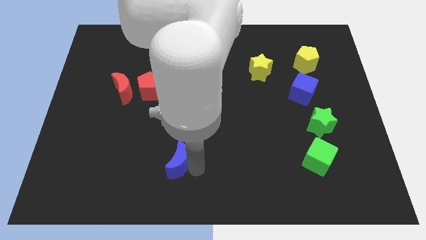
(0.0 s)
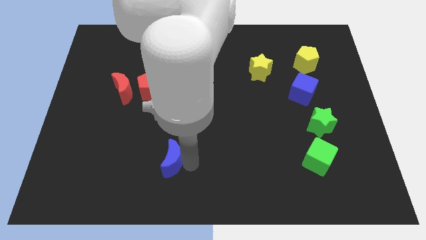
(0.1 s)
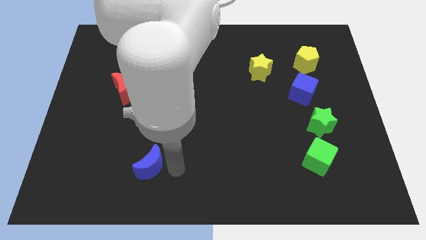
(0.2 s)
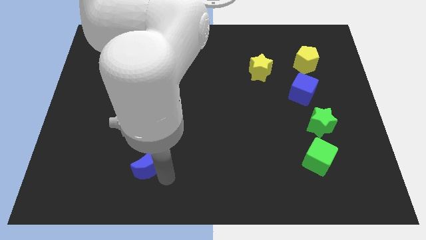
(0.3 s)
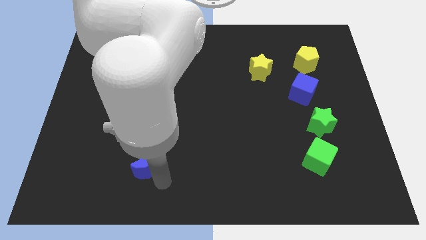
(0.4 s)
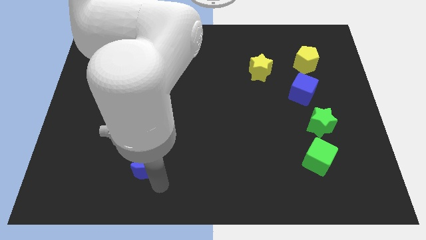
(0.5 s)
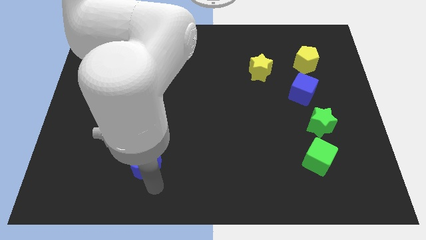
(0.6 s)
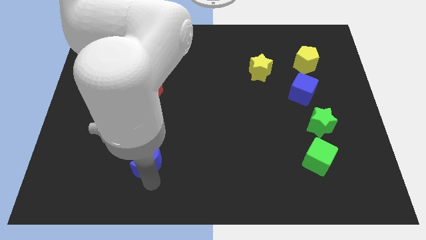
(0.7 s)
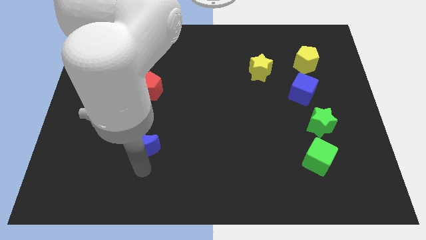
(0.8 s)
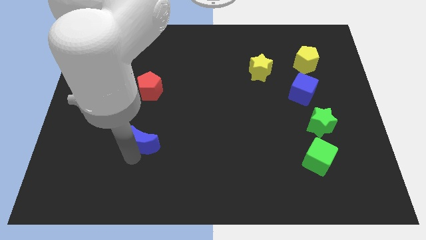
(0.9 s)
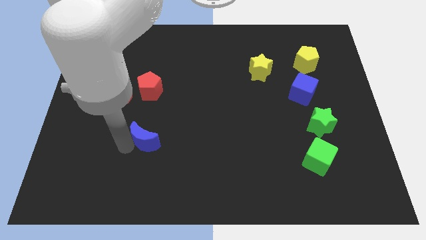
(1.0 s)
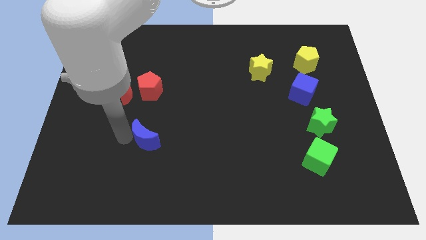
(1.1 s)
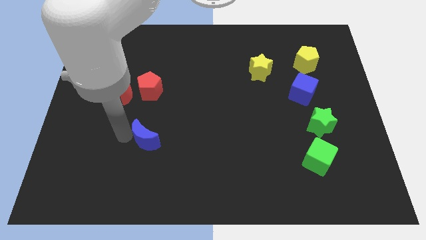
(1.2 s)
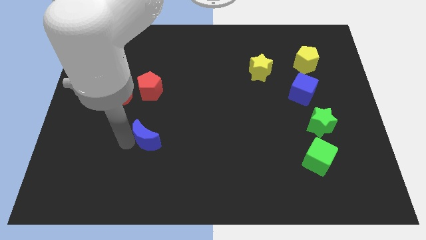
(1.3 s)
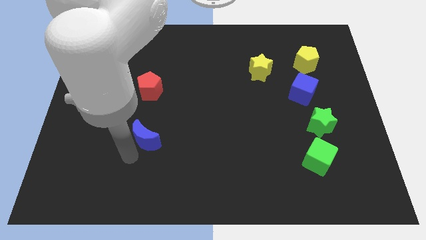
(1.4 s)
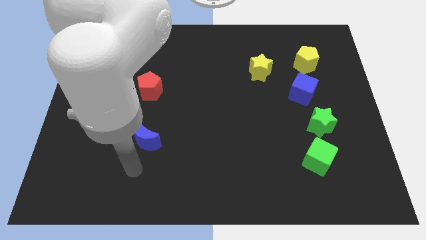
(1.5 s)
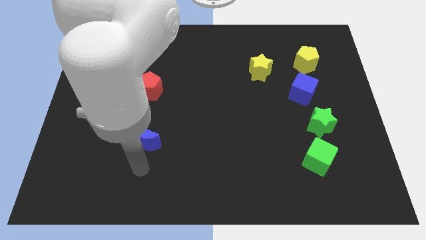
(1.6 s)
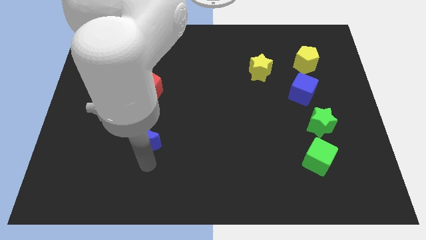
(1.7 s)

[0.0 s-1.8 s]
move the blue crescent vertically below the red pentagon

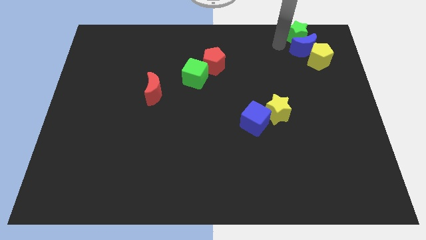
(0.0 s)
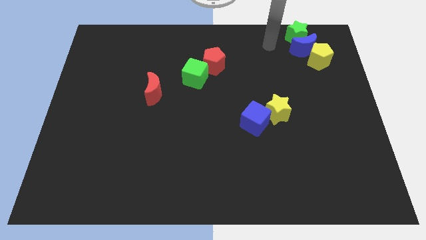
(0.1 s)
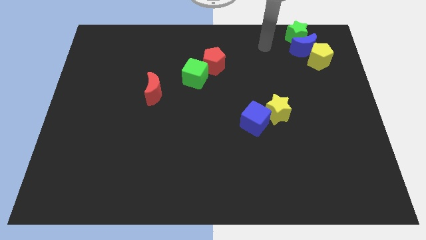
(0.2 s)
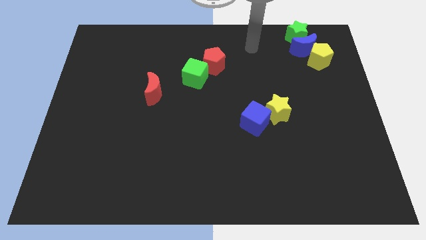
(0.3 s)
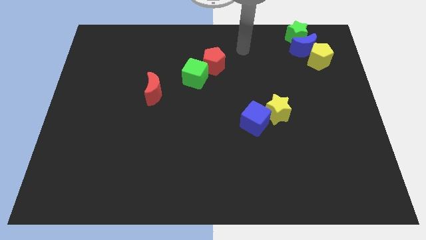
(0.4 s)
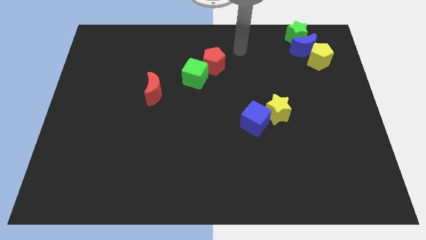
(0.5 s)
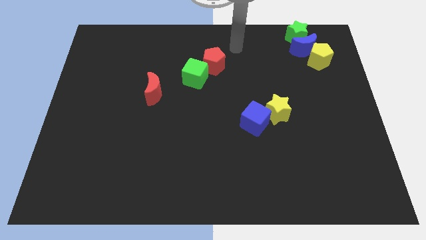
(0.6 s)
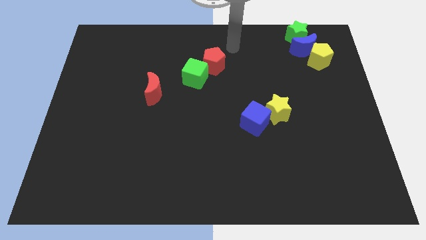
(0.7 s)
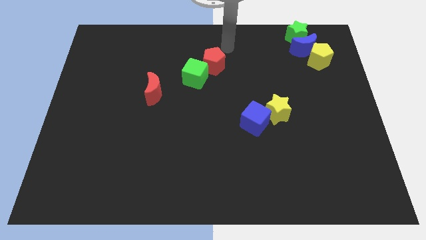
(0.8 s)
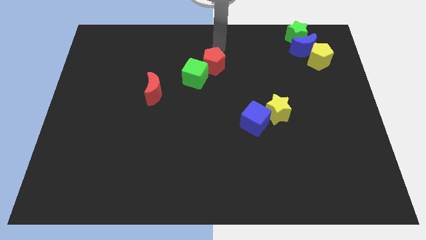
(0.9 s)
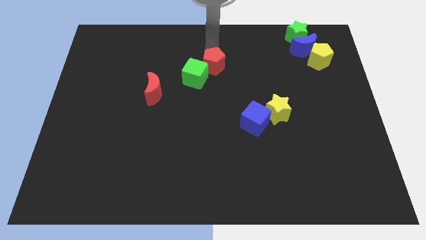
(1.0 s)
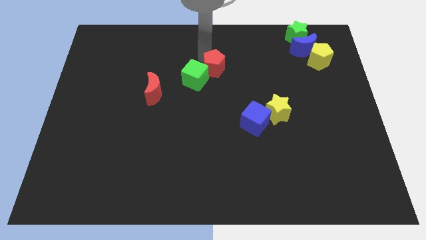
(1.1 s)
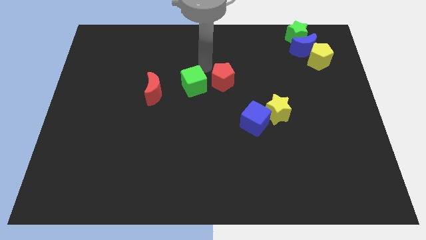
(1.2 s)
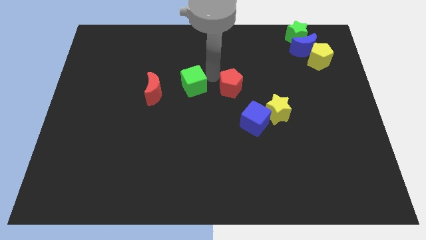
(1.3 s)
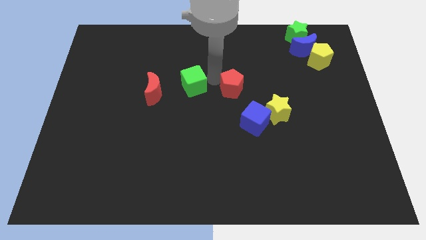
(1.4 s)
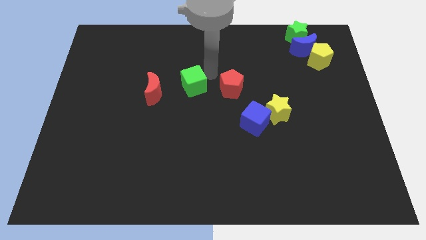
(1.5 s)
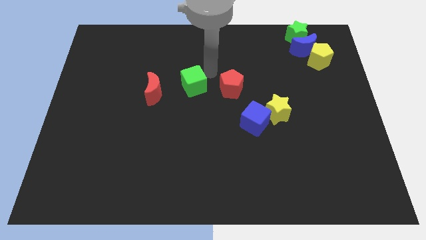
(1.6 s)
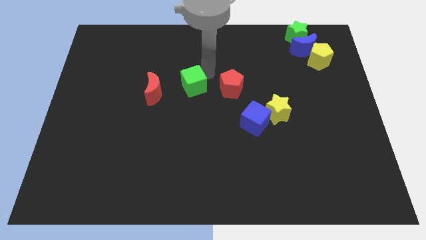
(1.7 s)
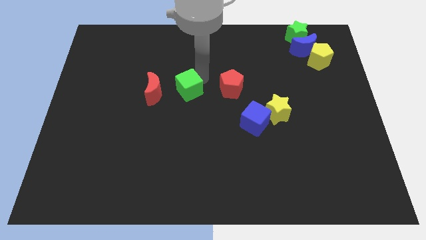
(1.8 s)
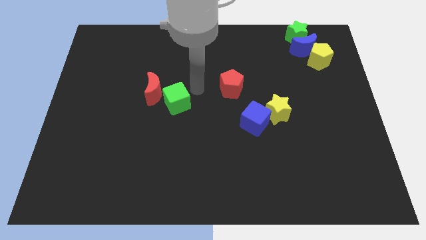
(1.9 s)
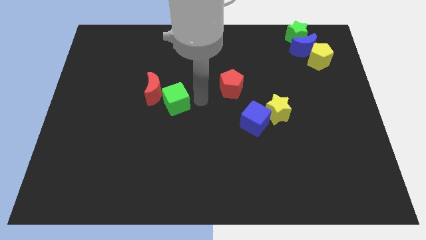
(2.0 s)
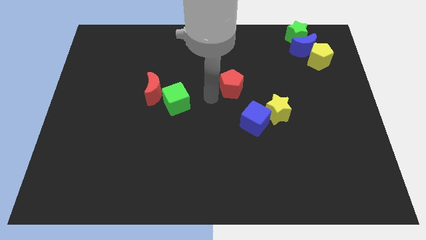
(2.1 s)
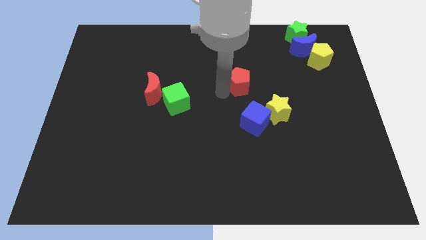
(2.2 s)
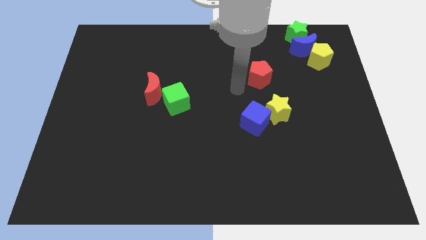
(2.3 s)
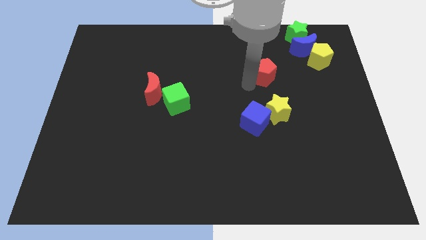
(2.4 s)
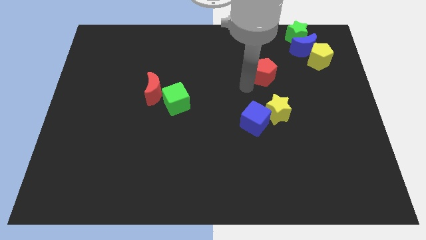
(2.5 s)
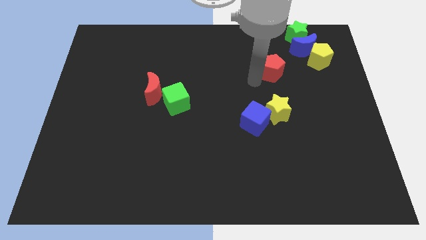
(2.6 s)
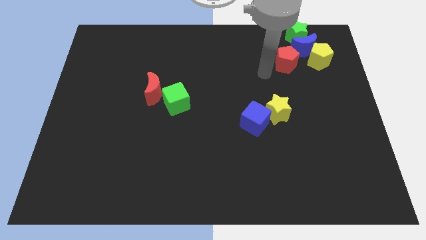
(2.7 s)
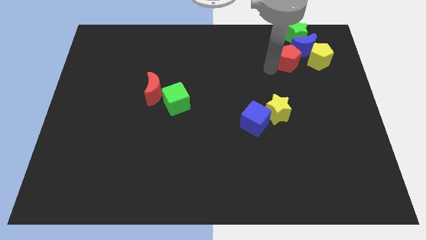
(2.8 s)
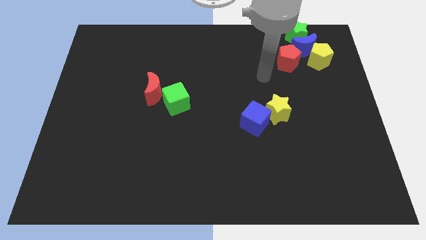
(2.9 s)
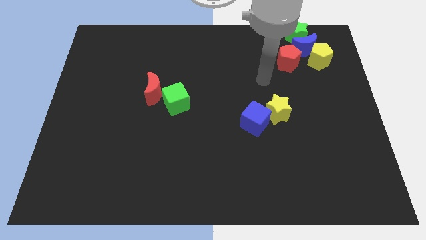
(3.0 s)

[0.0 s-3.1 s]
place the red pentagon bottom left to the blue crescent

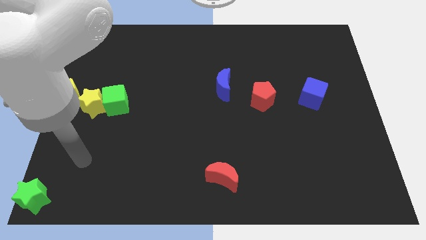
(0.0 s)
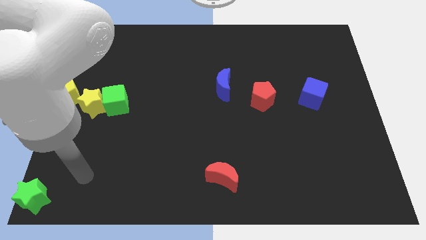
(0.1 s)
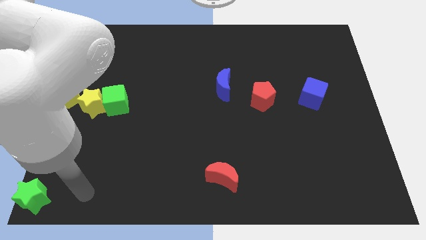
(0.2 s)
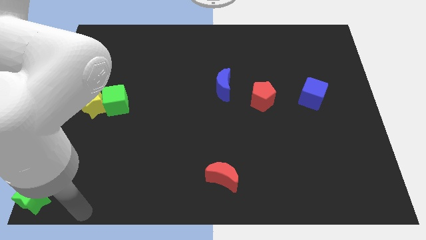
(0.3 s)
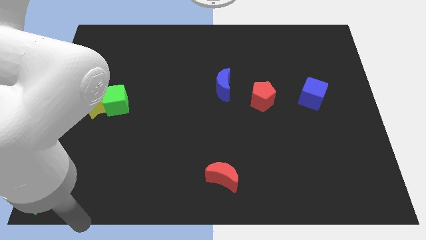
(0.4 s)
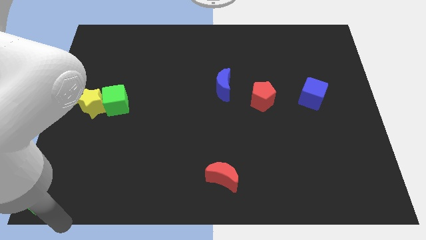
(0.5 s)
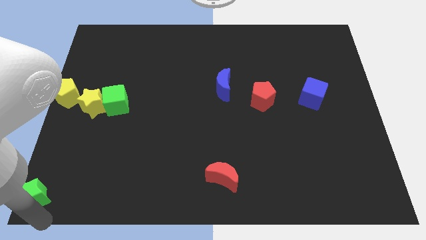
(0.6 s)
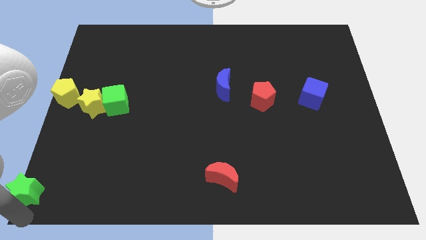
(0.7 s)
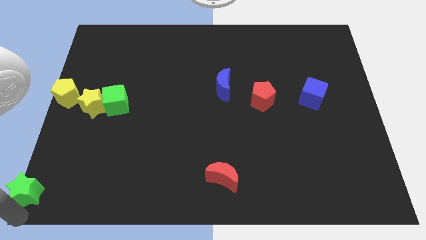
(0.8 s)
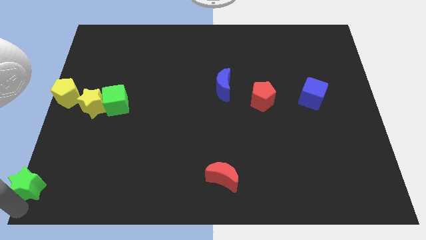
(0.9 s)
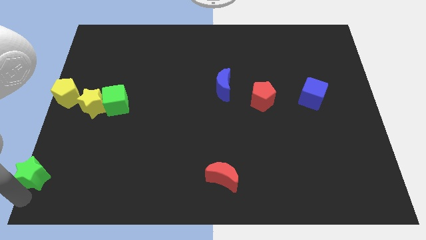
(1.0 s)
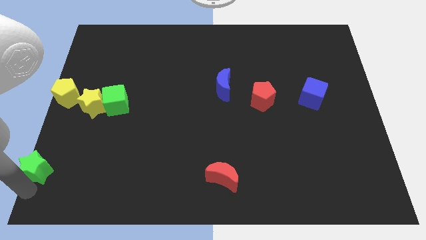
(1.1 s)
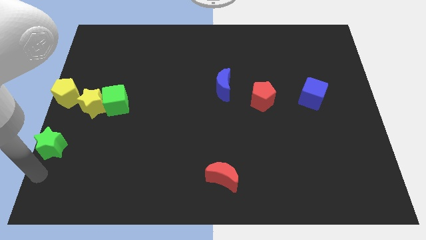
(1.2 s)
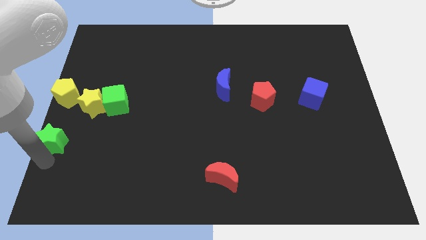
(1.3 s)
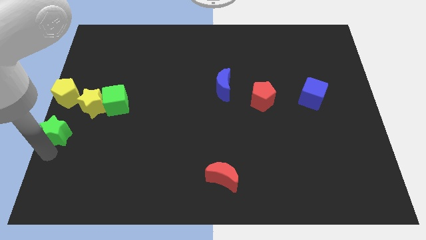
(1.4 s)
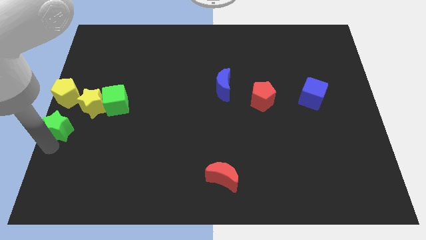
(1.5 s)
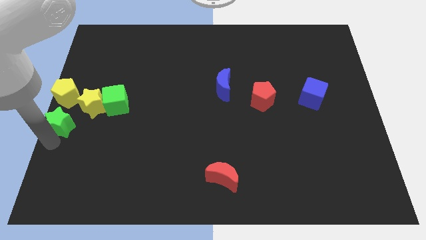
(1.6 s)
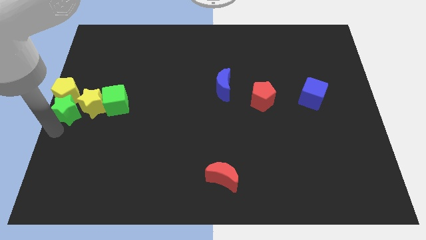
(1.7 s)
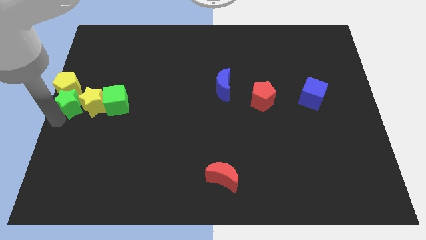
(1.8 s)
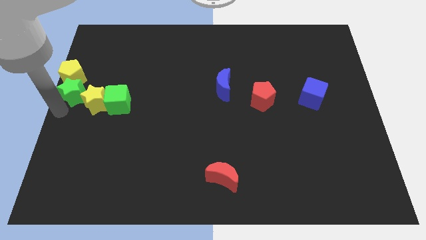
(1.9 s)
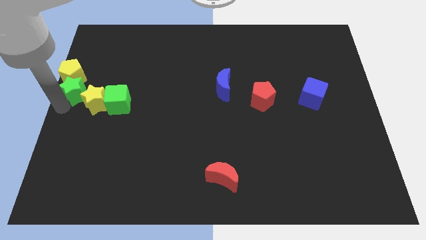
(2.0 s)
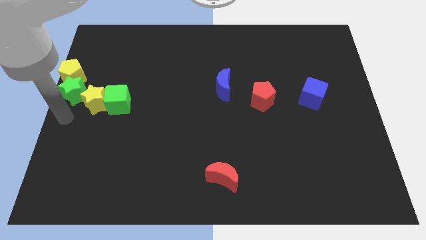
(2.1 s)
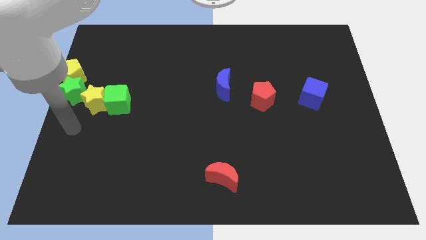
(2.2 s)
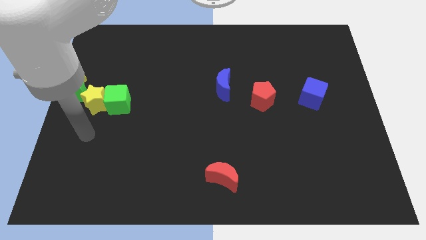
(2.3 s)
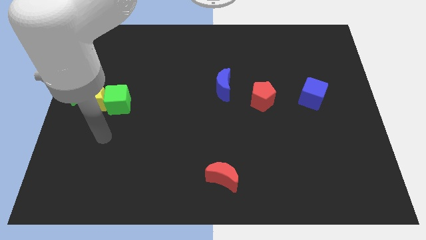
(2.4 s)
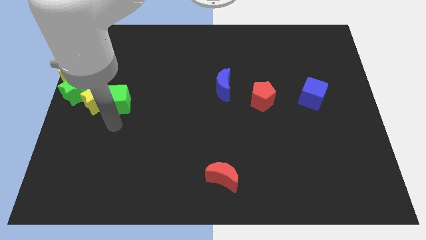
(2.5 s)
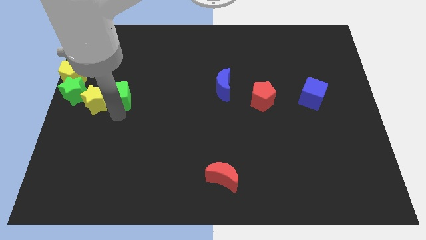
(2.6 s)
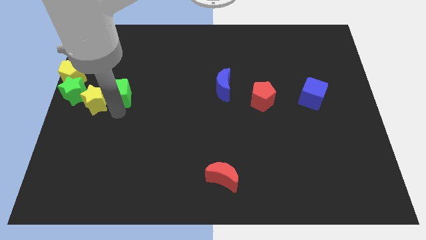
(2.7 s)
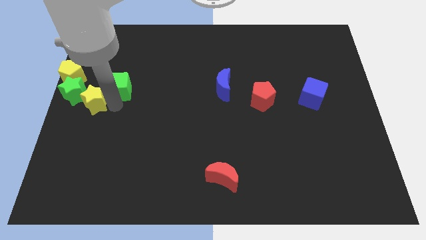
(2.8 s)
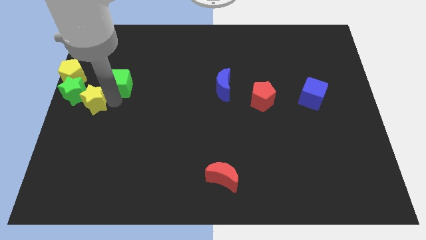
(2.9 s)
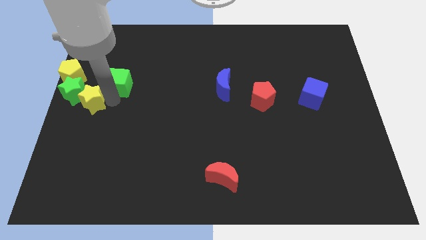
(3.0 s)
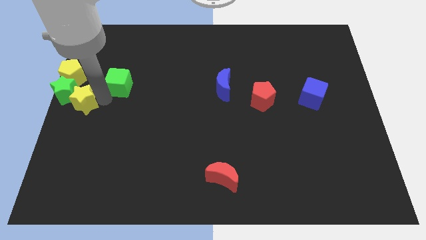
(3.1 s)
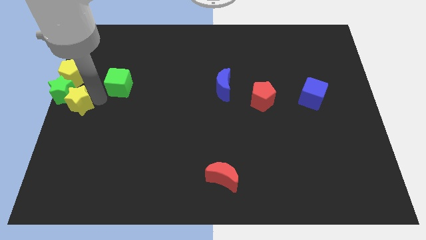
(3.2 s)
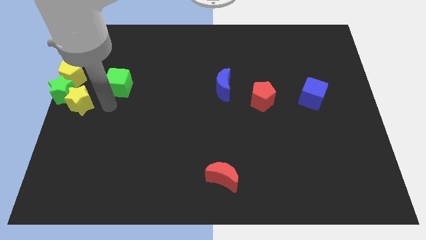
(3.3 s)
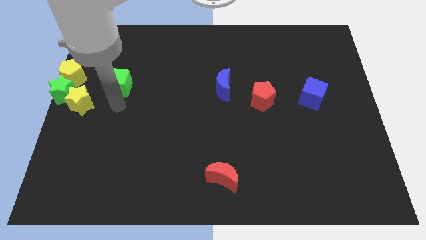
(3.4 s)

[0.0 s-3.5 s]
push the green star at the bottom of the yellow pentagon

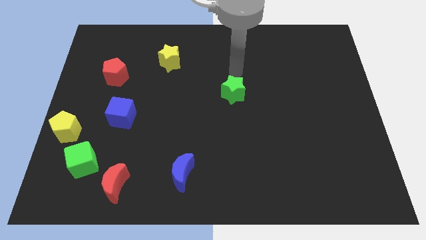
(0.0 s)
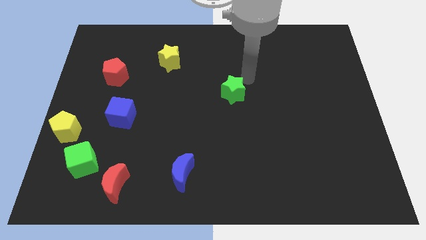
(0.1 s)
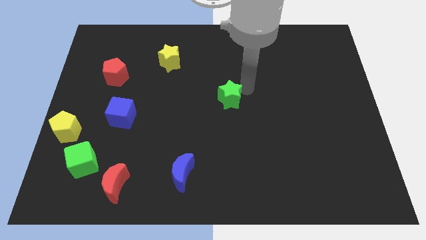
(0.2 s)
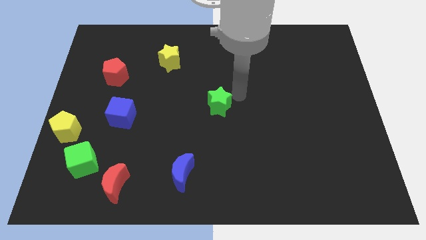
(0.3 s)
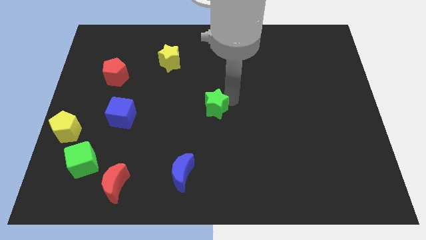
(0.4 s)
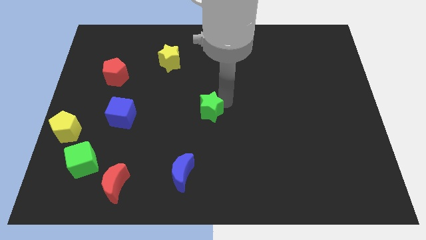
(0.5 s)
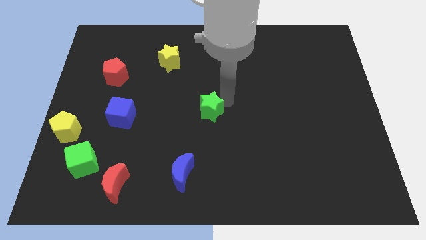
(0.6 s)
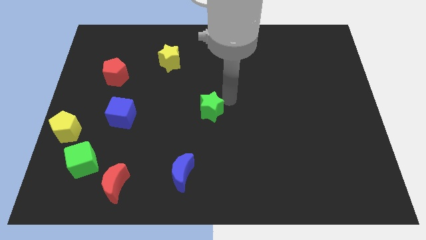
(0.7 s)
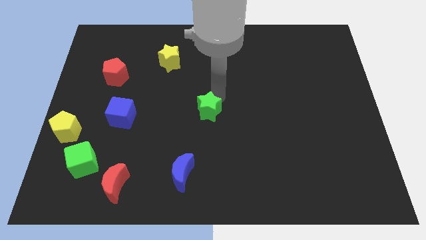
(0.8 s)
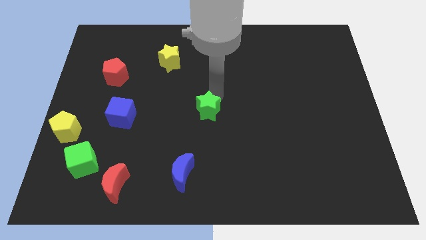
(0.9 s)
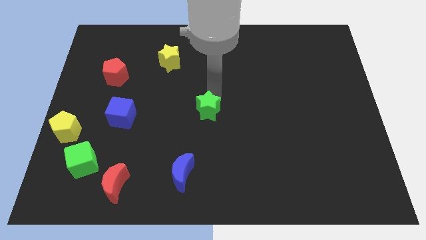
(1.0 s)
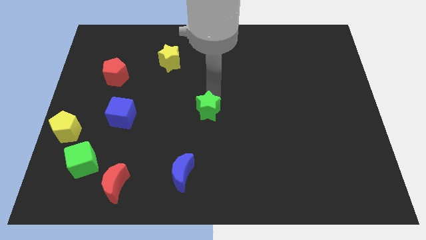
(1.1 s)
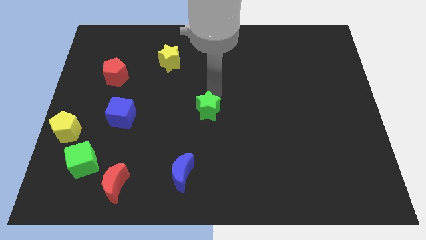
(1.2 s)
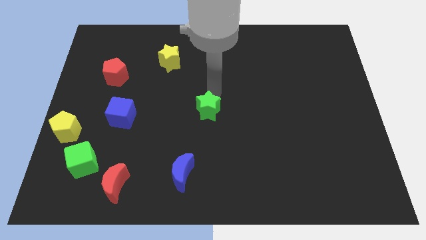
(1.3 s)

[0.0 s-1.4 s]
move the green star to the right of the blue cube
